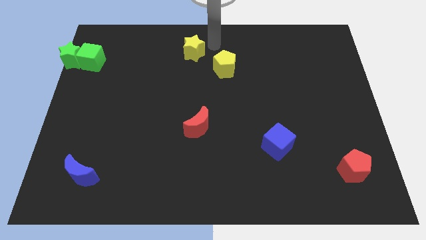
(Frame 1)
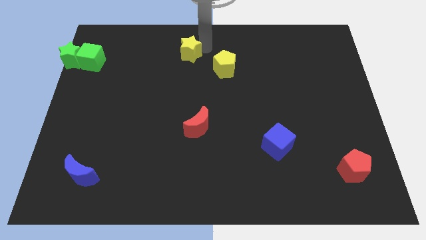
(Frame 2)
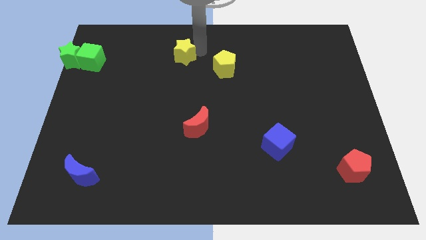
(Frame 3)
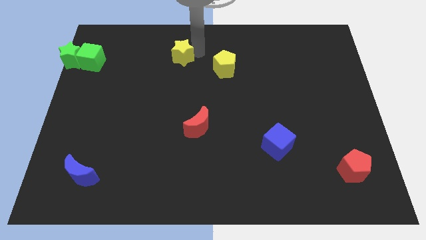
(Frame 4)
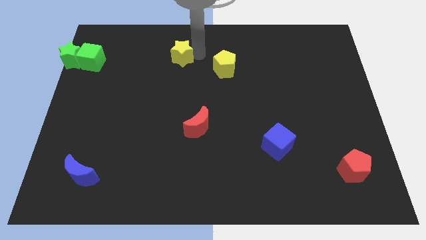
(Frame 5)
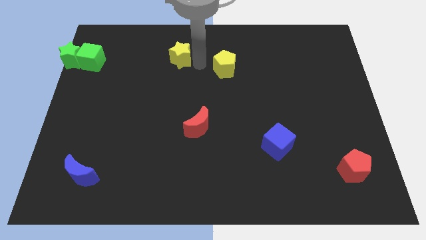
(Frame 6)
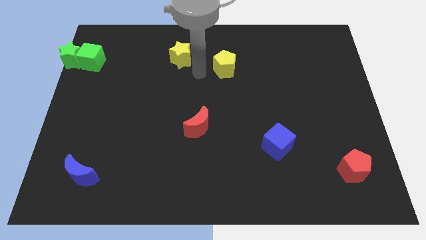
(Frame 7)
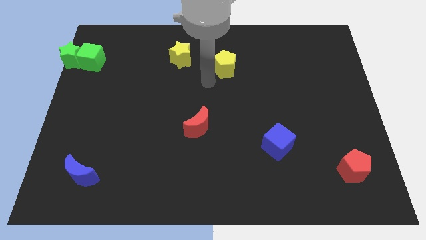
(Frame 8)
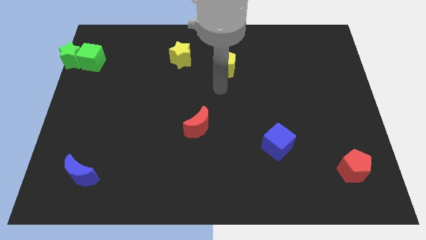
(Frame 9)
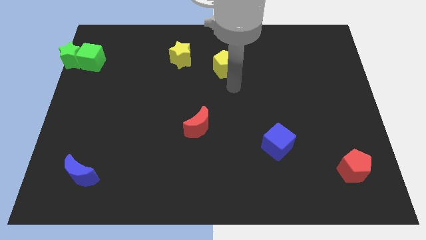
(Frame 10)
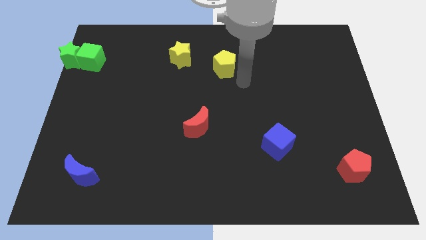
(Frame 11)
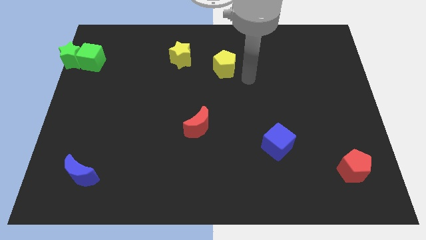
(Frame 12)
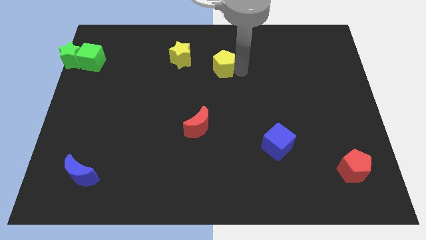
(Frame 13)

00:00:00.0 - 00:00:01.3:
push the yellow star to the top left side of the yellow pentagon

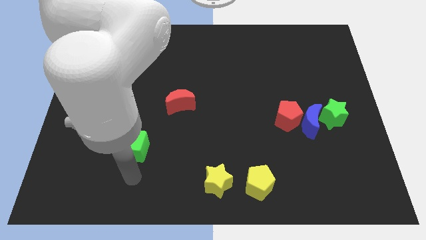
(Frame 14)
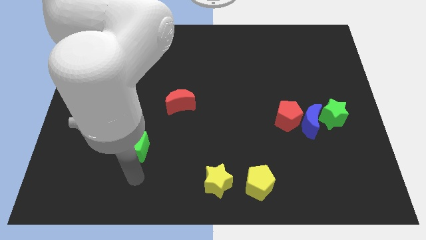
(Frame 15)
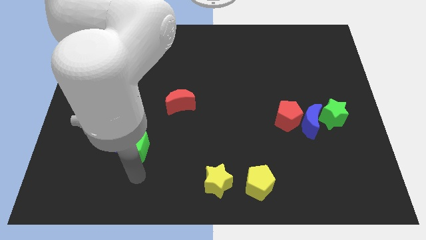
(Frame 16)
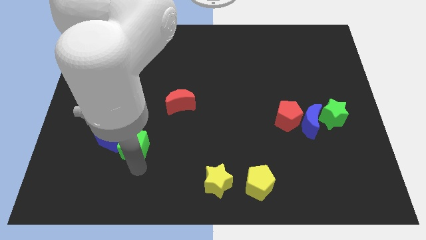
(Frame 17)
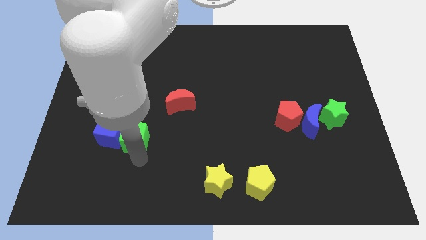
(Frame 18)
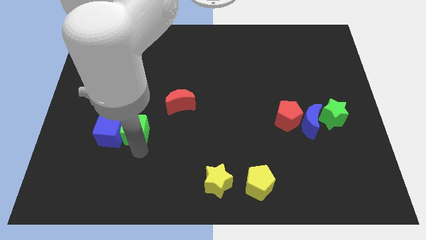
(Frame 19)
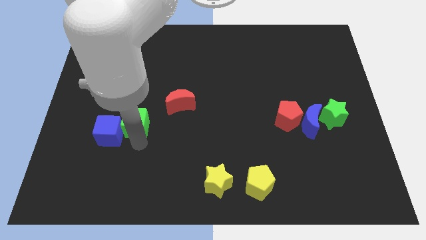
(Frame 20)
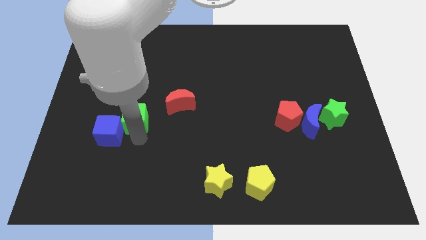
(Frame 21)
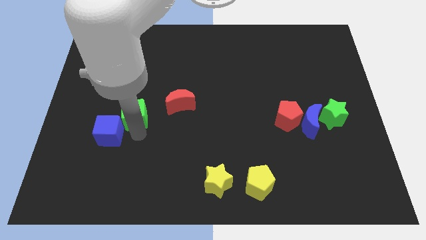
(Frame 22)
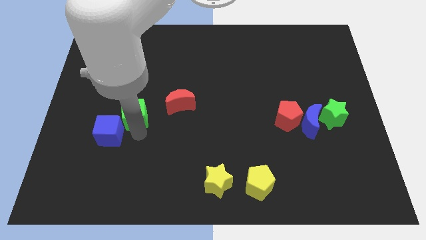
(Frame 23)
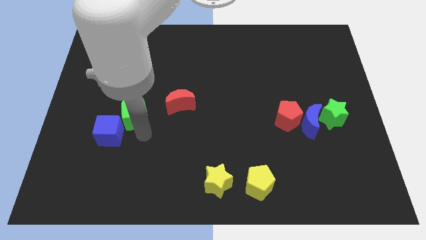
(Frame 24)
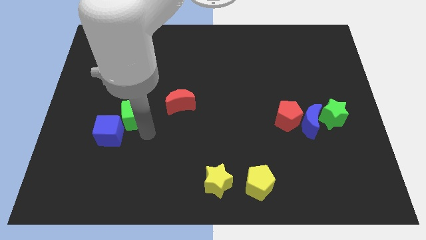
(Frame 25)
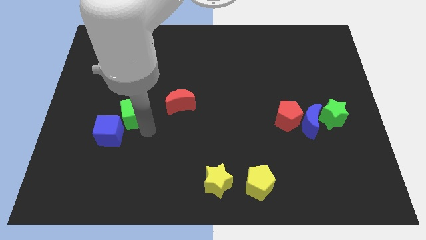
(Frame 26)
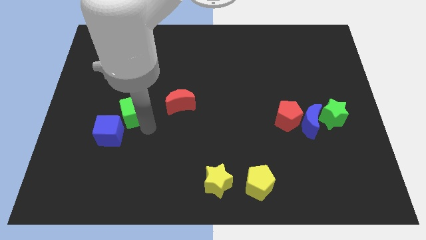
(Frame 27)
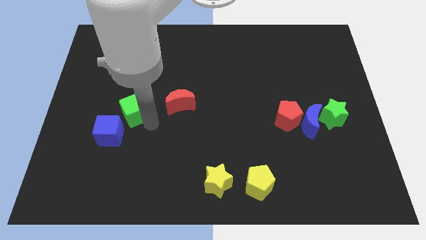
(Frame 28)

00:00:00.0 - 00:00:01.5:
push the green cube to the left of the red crescent

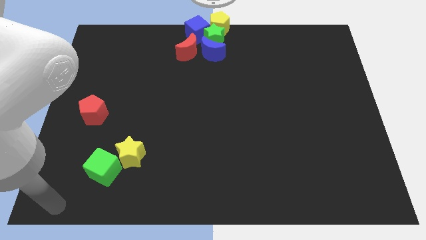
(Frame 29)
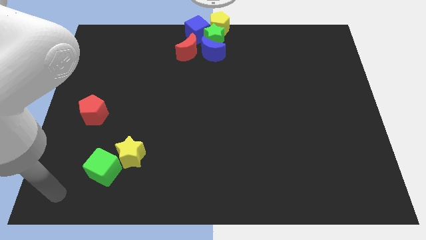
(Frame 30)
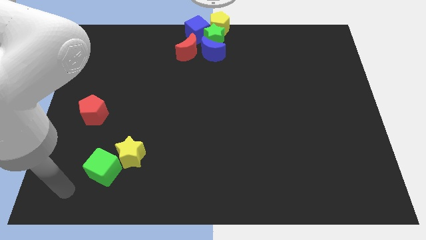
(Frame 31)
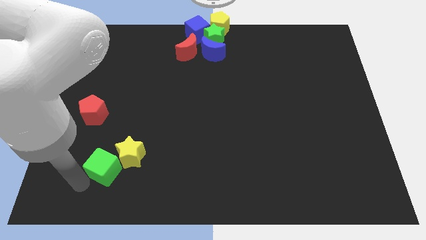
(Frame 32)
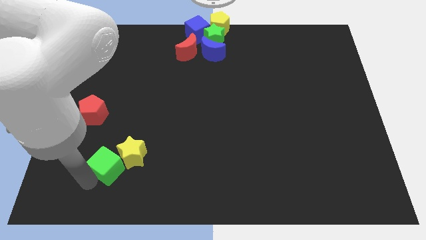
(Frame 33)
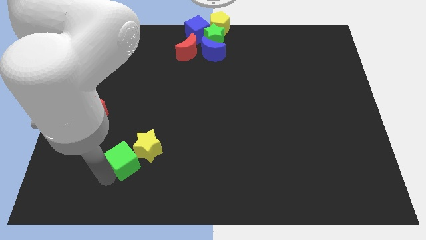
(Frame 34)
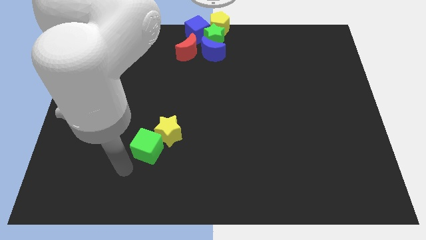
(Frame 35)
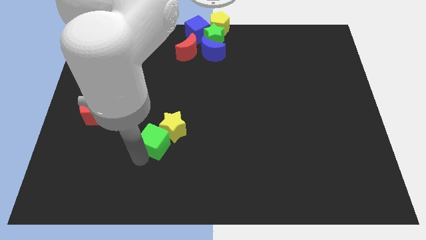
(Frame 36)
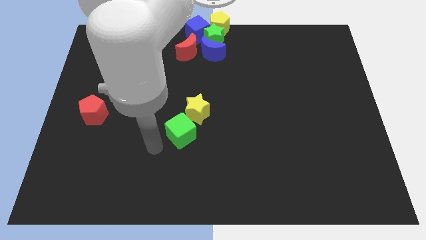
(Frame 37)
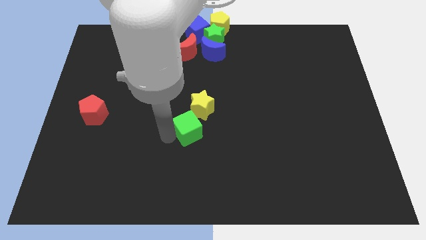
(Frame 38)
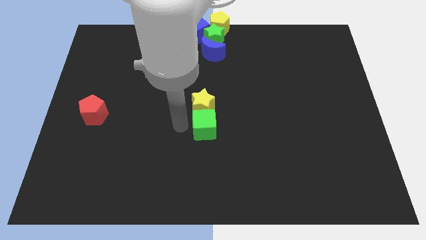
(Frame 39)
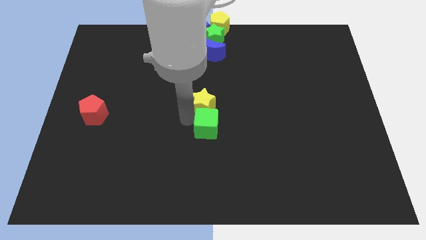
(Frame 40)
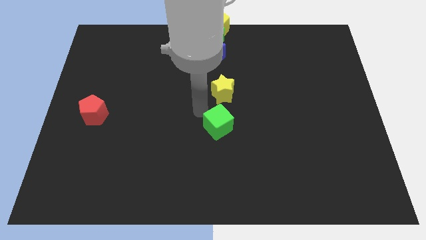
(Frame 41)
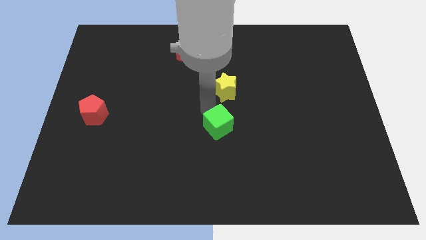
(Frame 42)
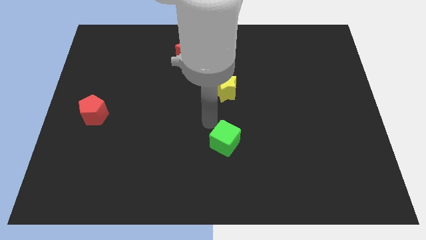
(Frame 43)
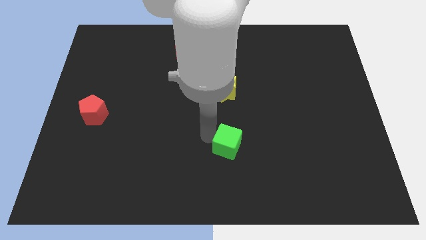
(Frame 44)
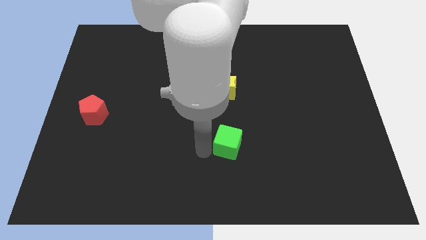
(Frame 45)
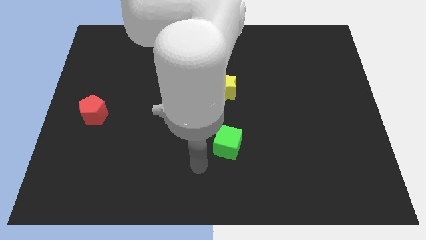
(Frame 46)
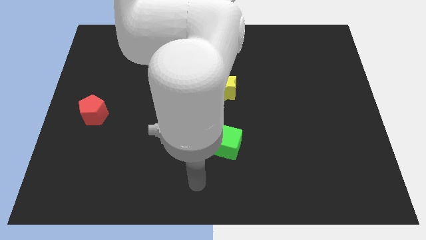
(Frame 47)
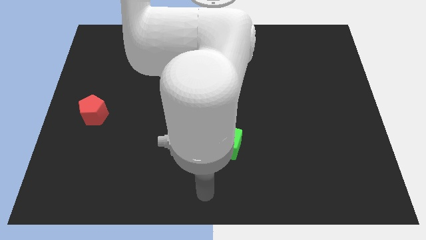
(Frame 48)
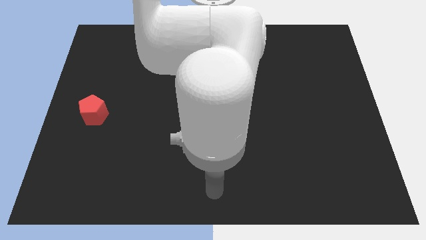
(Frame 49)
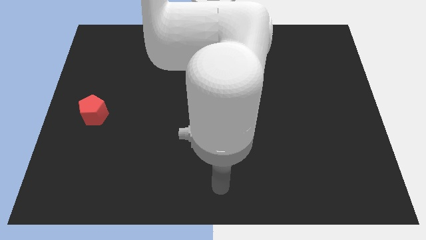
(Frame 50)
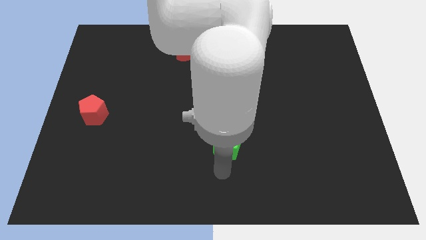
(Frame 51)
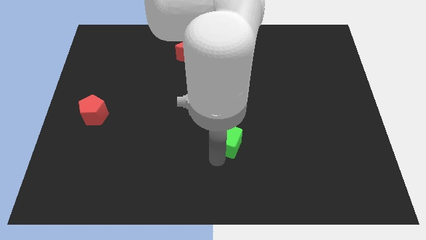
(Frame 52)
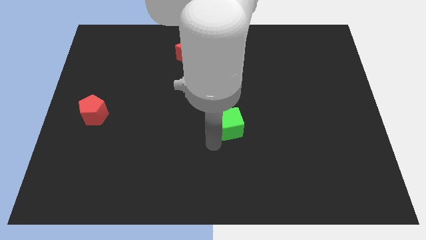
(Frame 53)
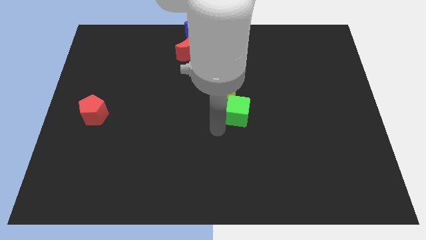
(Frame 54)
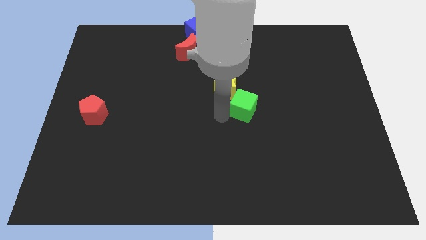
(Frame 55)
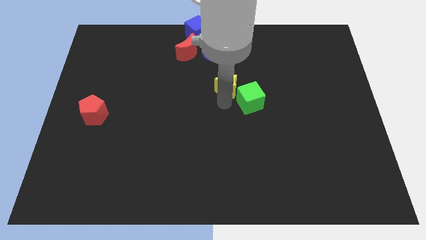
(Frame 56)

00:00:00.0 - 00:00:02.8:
move the green cube to the center of the board

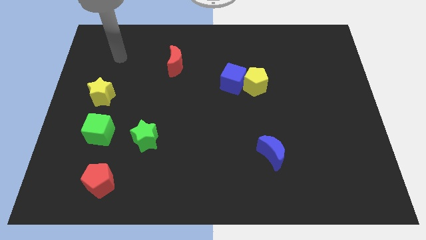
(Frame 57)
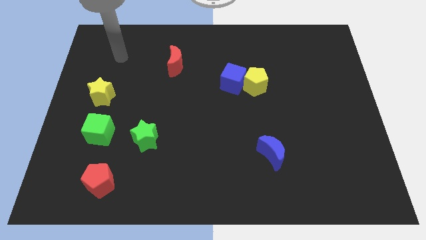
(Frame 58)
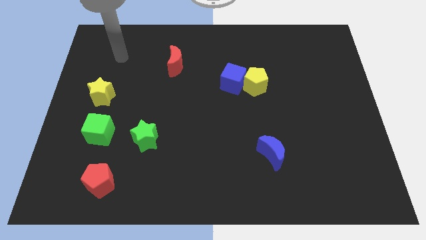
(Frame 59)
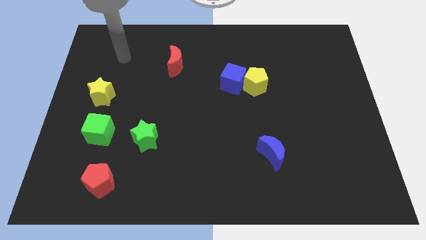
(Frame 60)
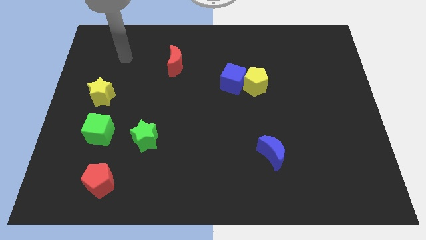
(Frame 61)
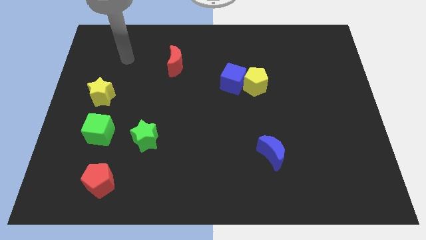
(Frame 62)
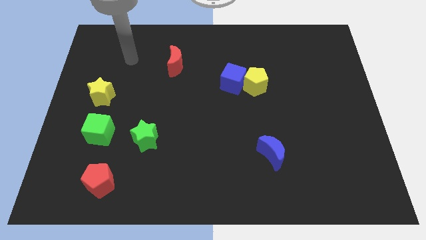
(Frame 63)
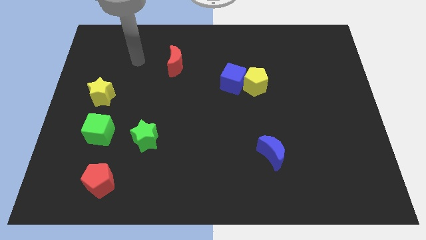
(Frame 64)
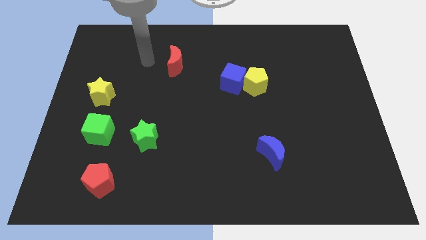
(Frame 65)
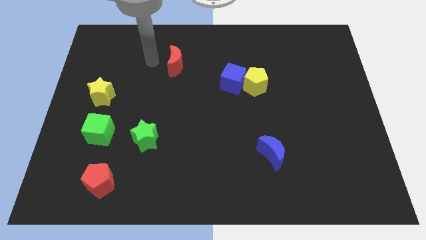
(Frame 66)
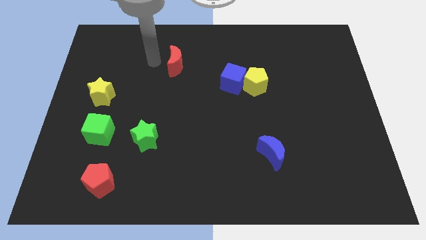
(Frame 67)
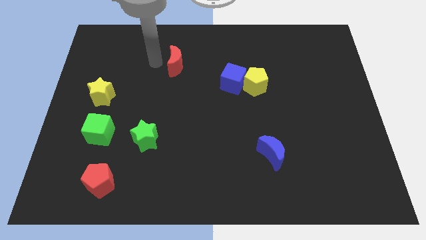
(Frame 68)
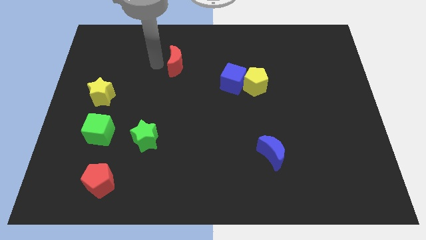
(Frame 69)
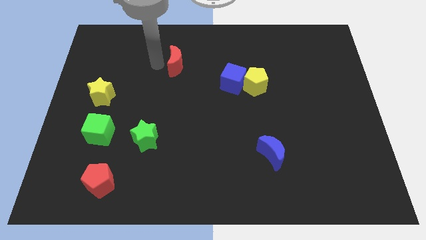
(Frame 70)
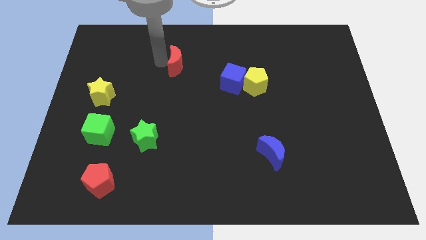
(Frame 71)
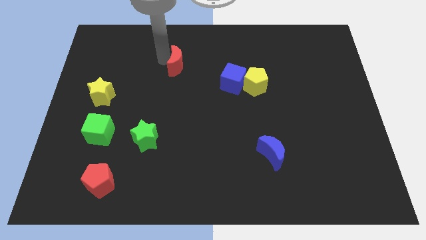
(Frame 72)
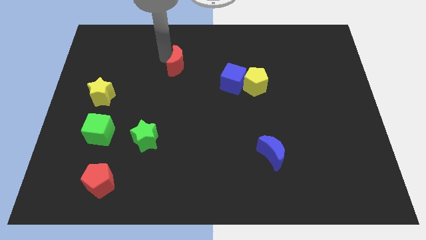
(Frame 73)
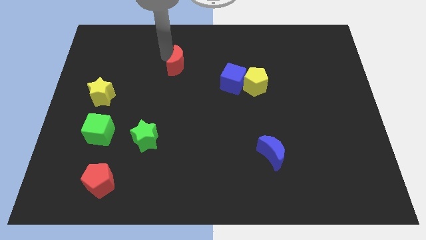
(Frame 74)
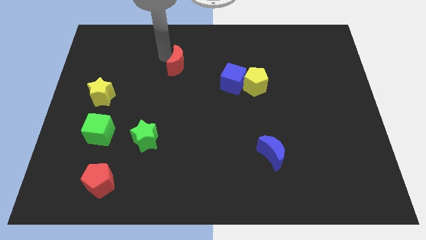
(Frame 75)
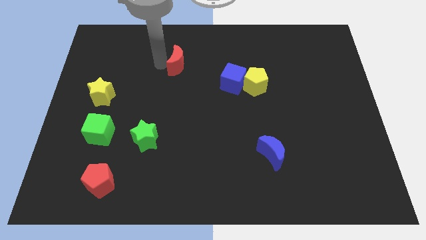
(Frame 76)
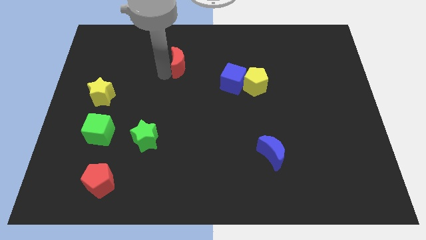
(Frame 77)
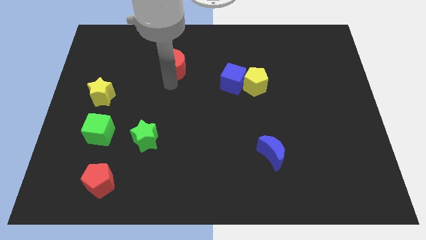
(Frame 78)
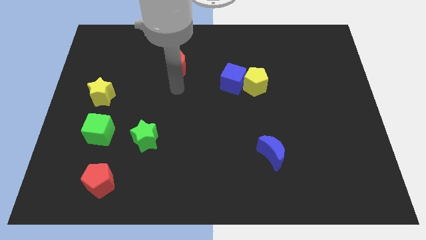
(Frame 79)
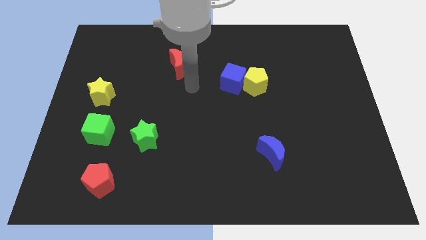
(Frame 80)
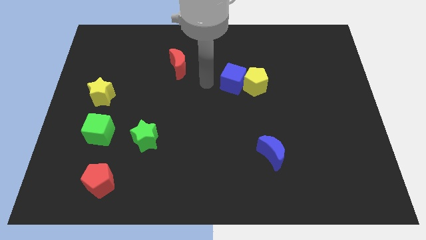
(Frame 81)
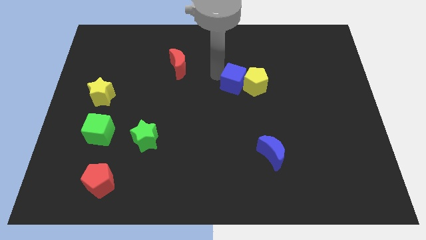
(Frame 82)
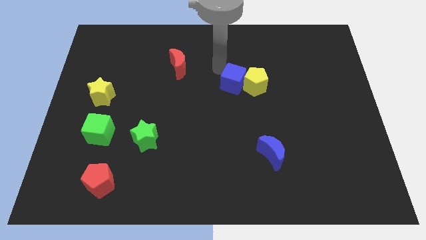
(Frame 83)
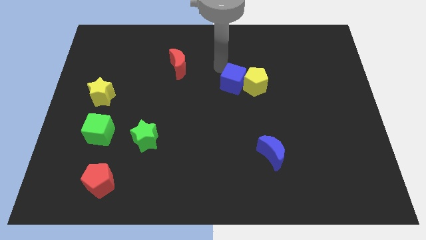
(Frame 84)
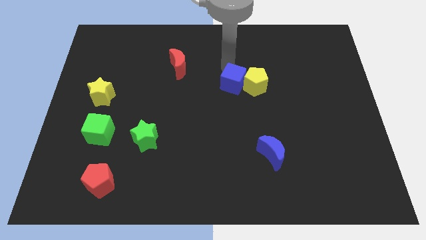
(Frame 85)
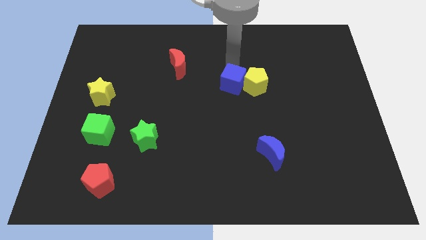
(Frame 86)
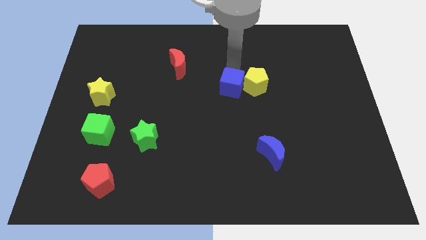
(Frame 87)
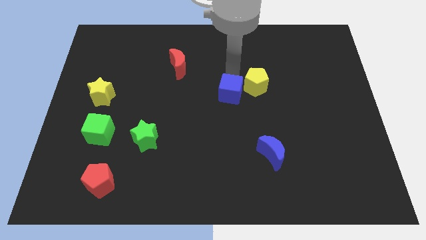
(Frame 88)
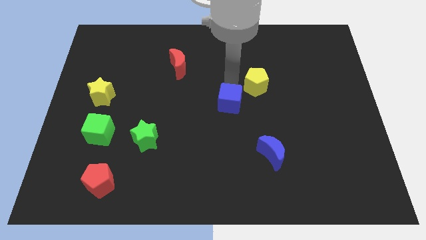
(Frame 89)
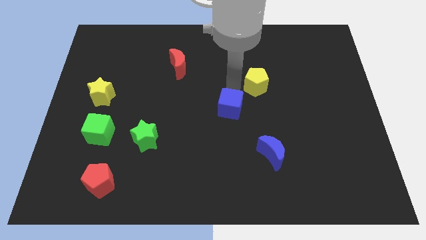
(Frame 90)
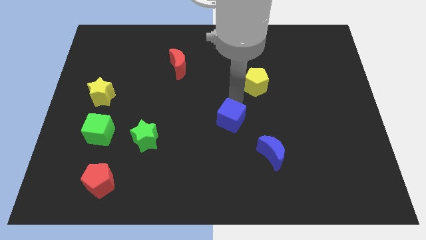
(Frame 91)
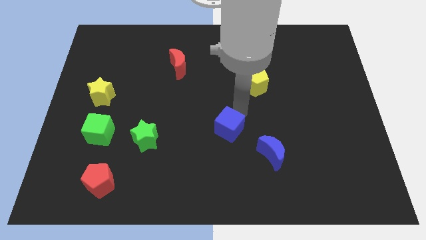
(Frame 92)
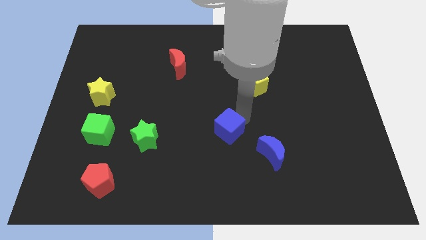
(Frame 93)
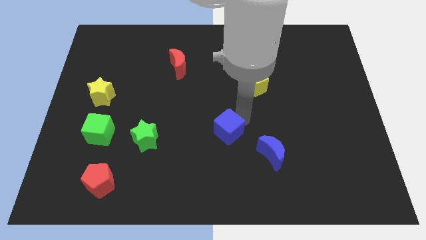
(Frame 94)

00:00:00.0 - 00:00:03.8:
separate the blue cube from the yellow pentagon
